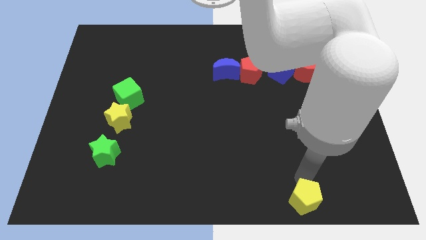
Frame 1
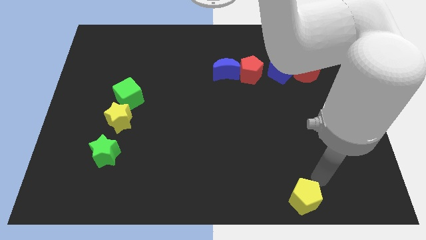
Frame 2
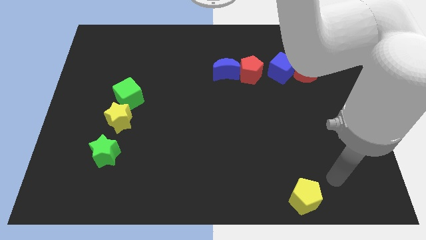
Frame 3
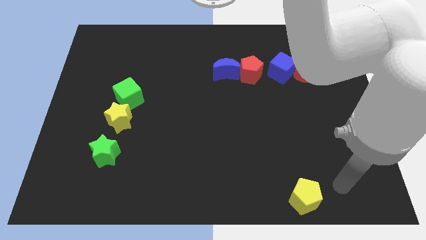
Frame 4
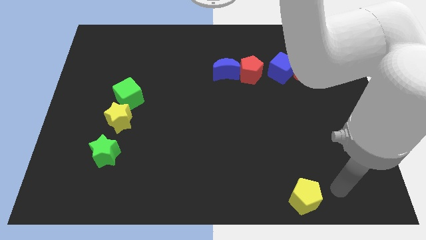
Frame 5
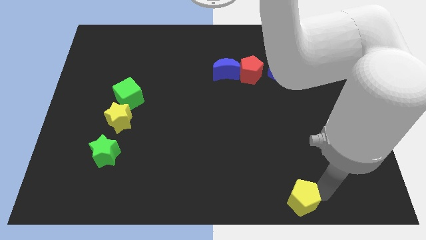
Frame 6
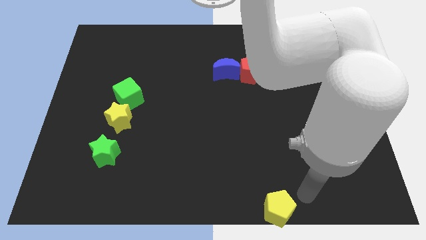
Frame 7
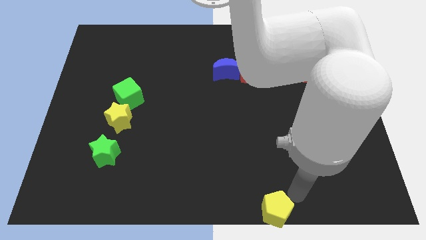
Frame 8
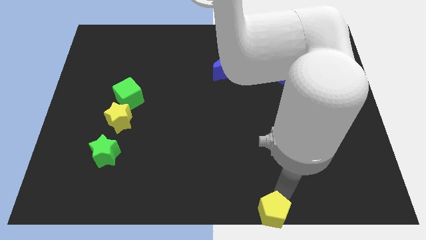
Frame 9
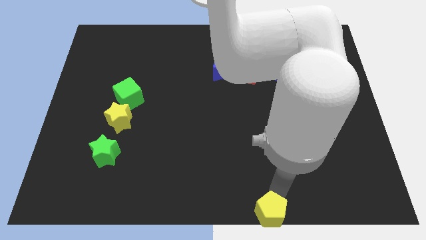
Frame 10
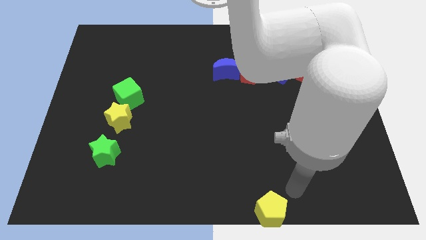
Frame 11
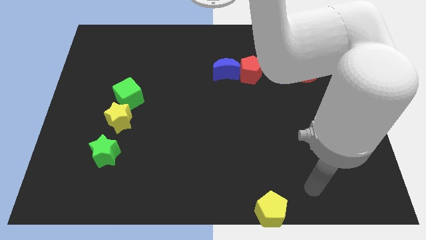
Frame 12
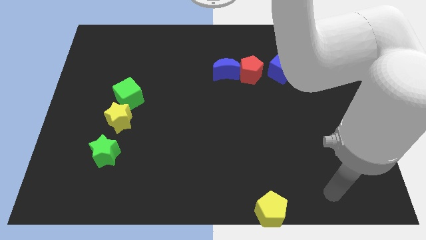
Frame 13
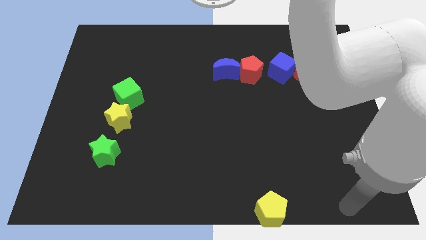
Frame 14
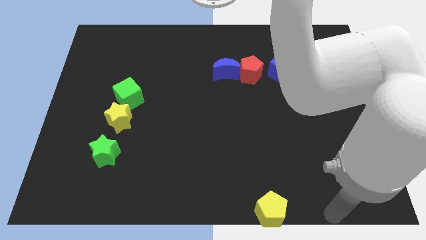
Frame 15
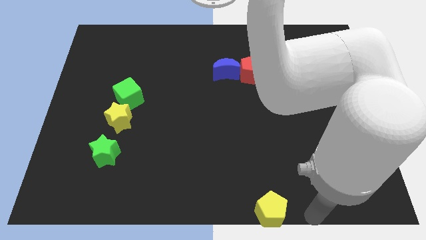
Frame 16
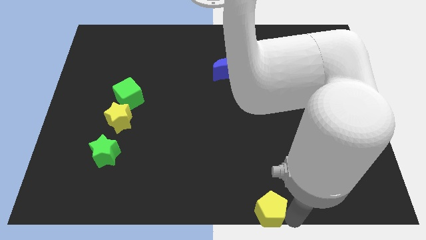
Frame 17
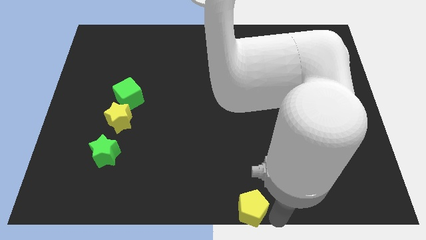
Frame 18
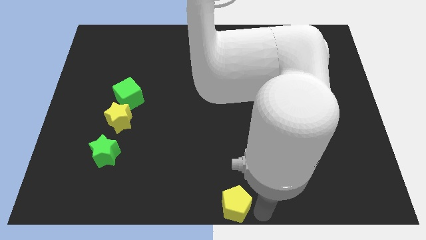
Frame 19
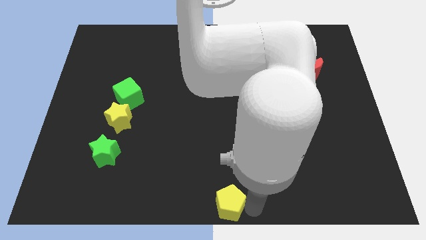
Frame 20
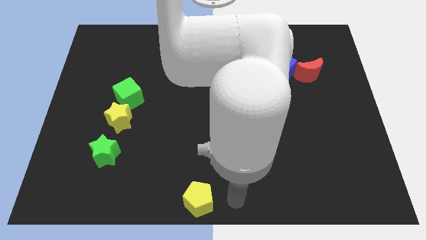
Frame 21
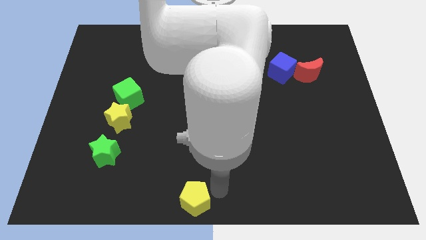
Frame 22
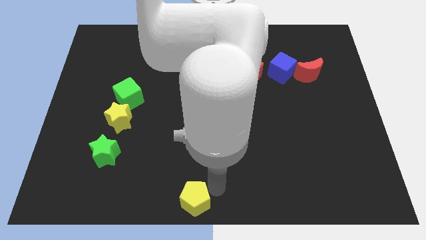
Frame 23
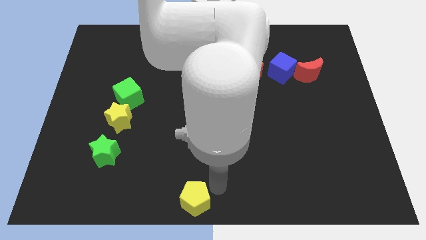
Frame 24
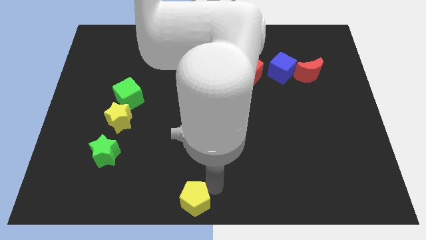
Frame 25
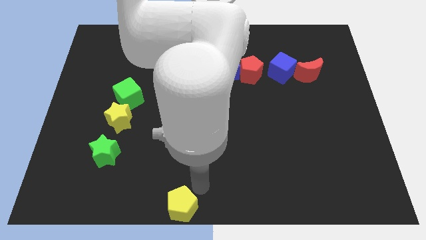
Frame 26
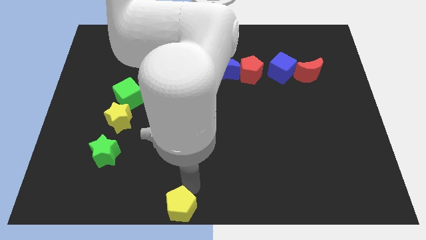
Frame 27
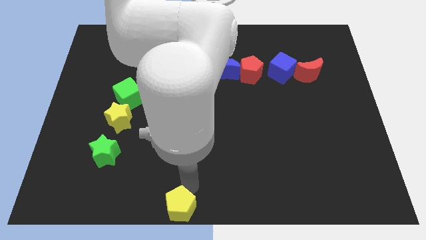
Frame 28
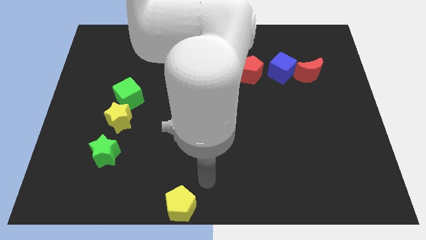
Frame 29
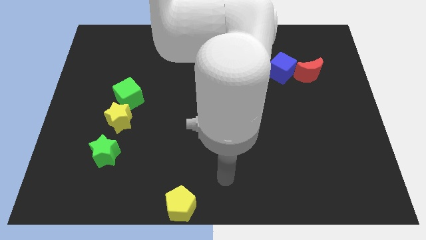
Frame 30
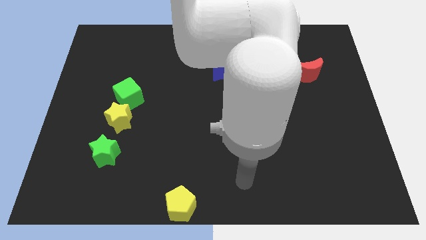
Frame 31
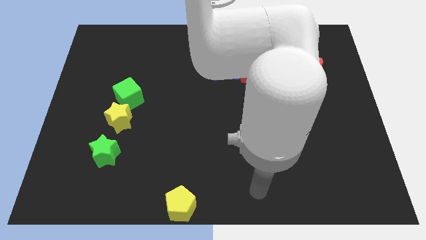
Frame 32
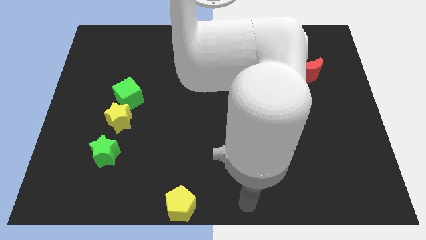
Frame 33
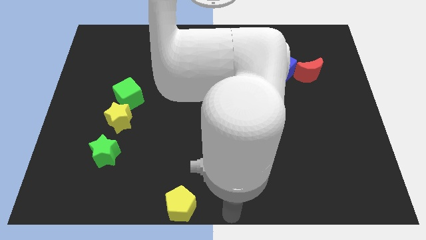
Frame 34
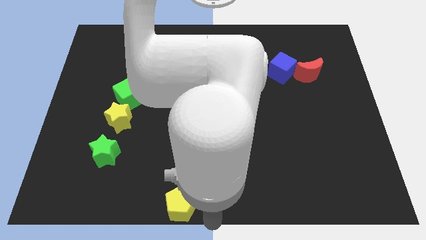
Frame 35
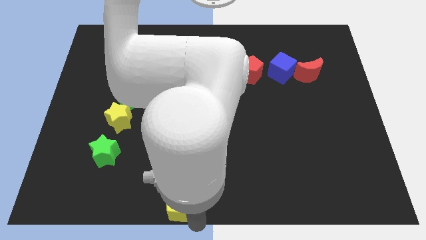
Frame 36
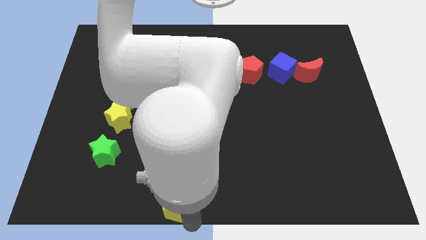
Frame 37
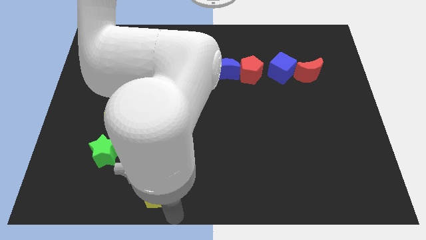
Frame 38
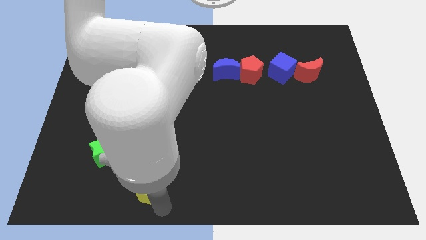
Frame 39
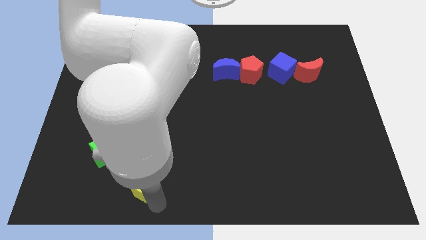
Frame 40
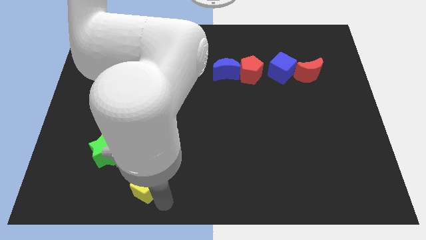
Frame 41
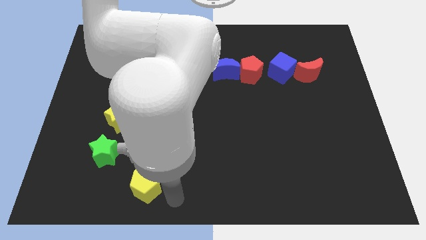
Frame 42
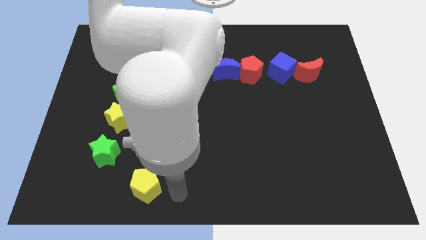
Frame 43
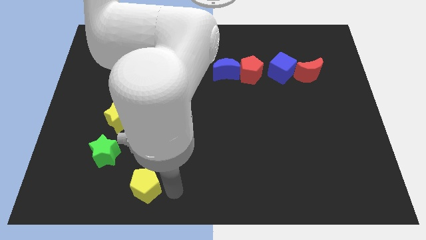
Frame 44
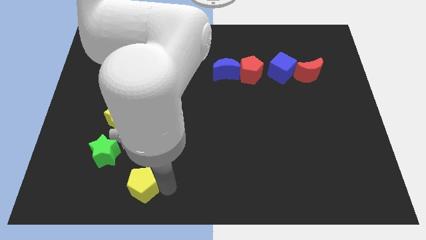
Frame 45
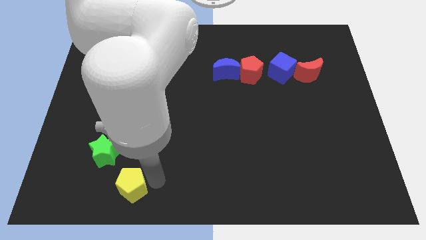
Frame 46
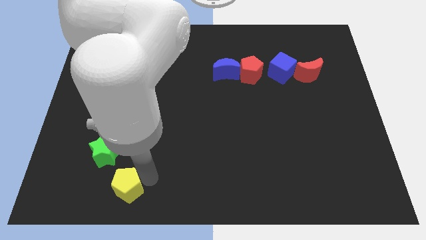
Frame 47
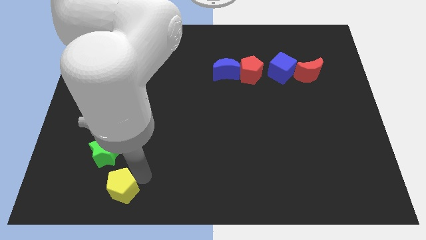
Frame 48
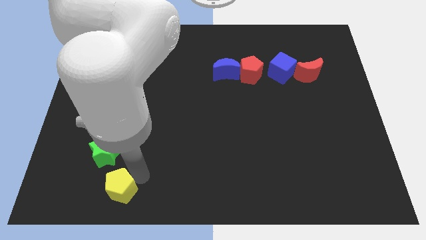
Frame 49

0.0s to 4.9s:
slide the yellow pentagon towards the green star

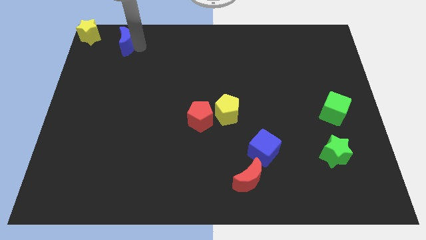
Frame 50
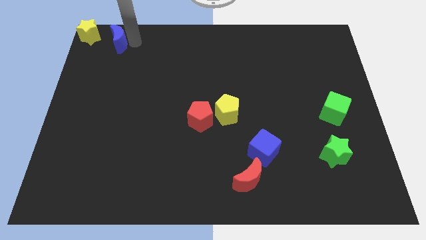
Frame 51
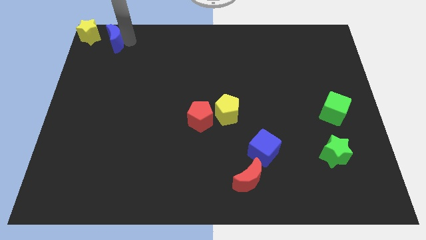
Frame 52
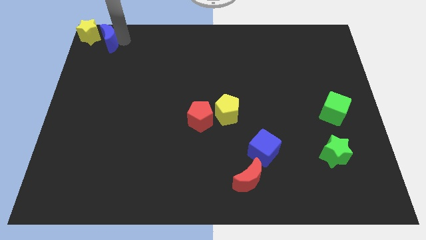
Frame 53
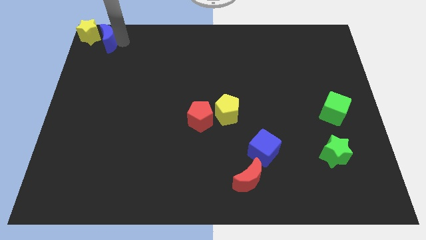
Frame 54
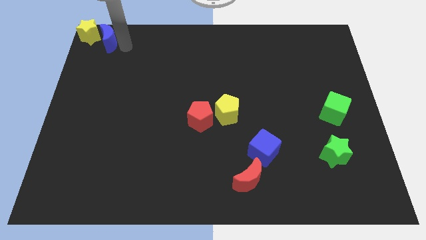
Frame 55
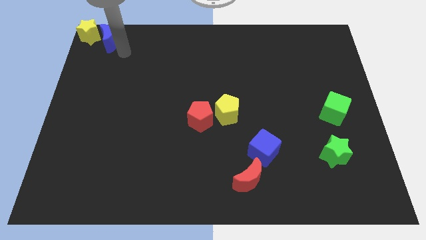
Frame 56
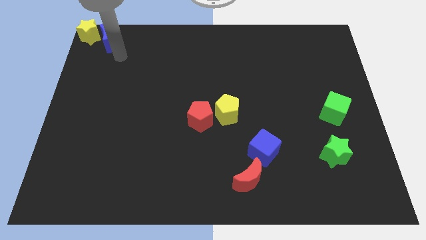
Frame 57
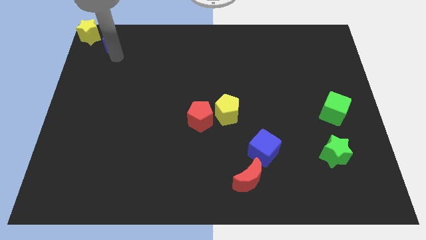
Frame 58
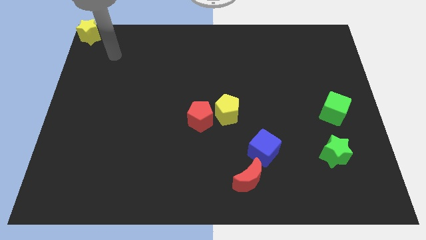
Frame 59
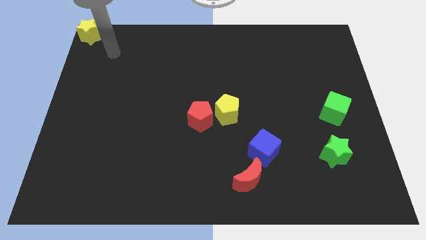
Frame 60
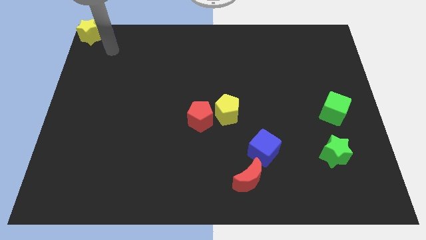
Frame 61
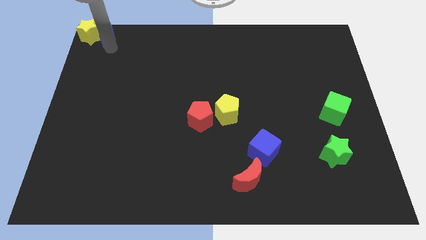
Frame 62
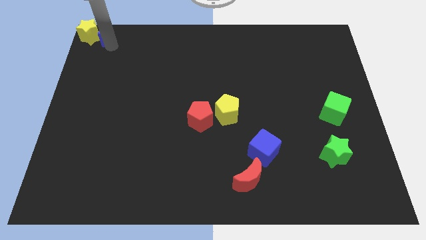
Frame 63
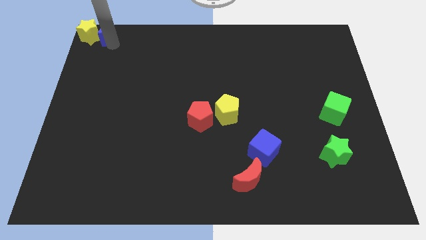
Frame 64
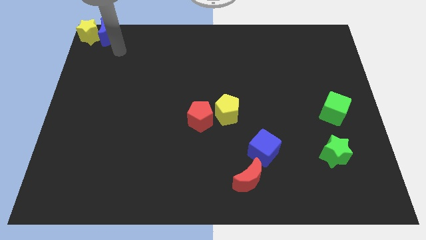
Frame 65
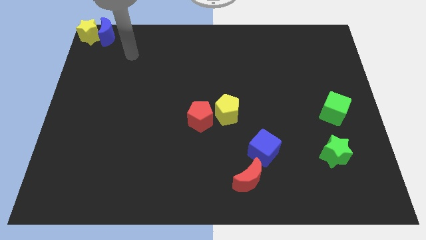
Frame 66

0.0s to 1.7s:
put the blue moon to the right of the yellow star

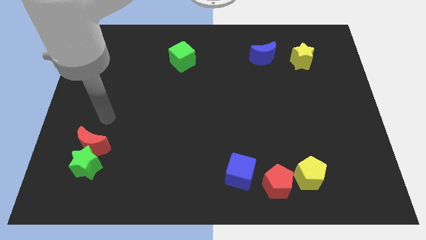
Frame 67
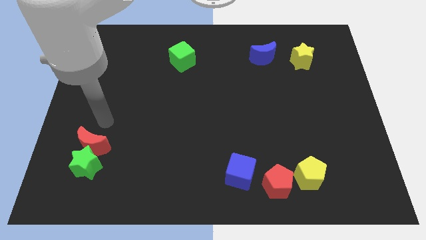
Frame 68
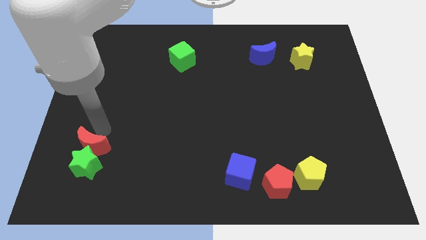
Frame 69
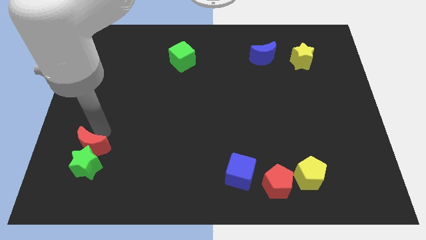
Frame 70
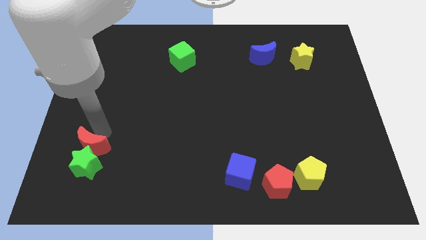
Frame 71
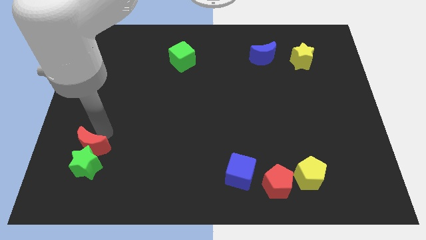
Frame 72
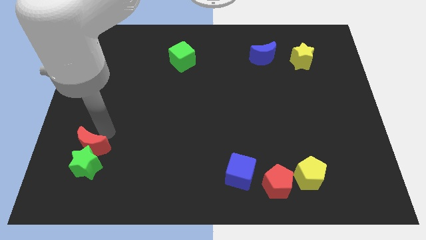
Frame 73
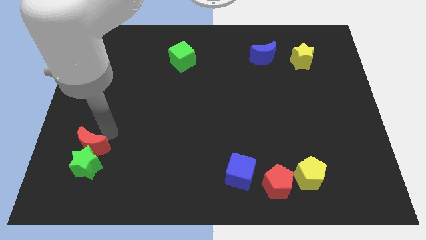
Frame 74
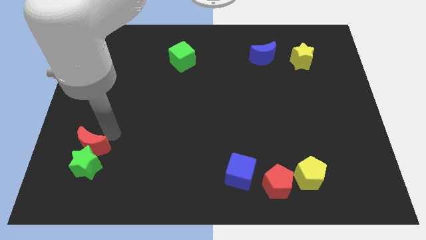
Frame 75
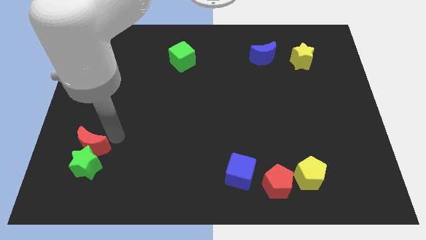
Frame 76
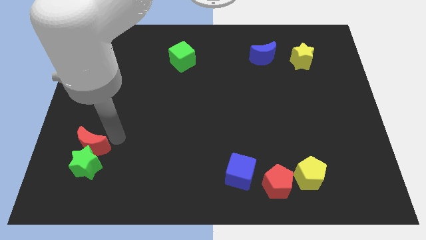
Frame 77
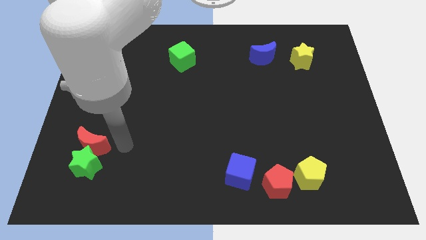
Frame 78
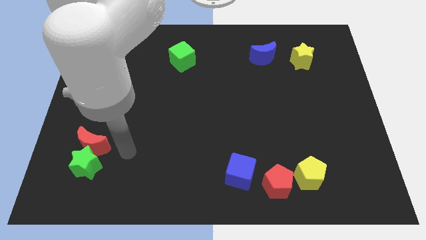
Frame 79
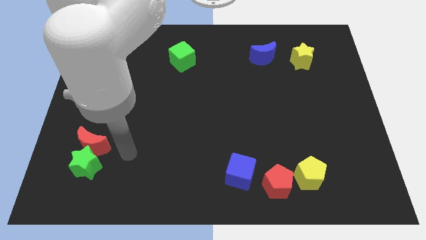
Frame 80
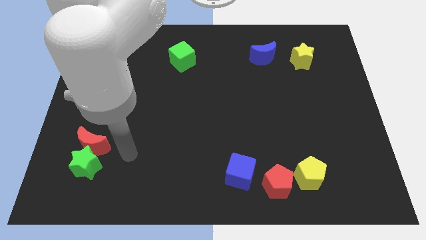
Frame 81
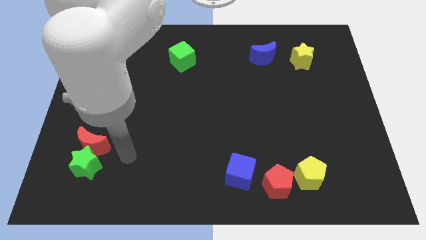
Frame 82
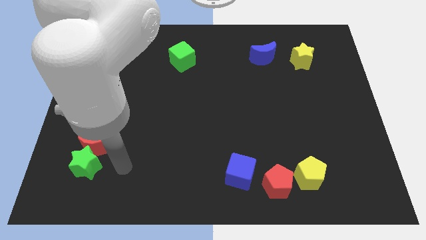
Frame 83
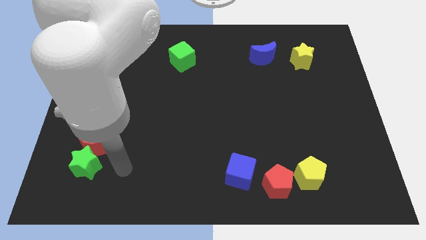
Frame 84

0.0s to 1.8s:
place your hand to the right of the green star

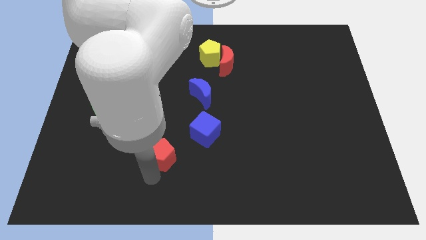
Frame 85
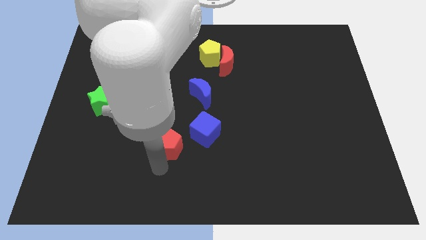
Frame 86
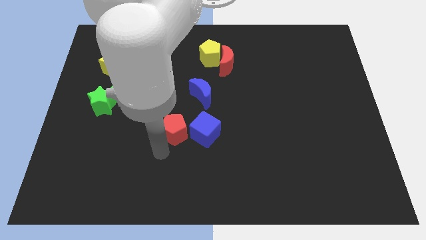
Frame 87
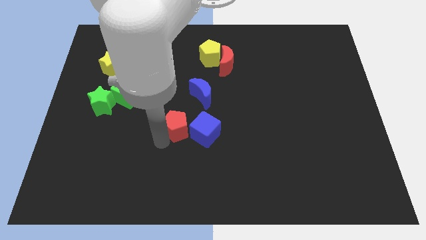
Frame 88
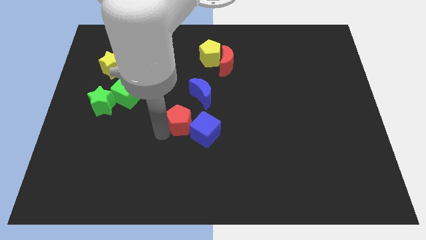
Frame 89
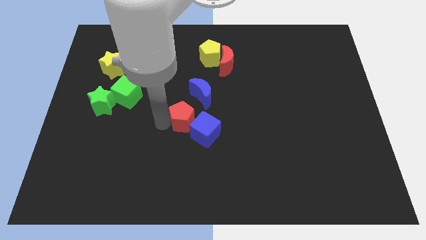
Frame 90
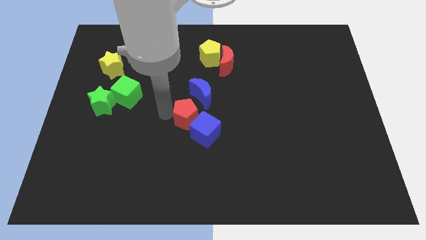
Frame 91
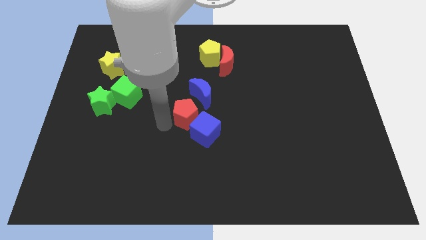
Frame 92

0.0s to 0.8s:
move the red pentagon between the blue crescent and the blue cube on the board

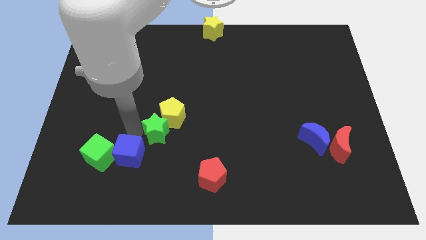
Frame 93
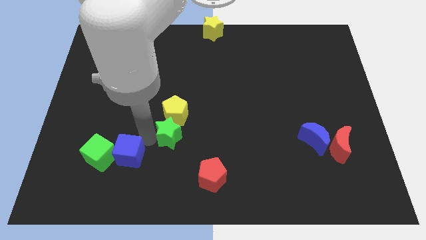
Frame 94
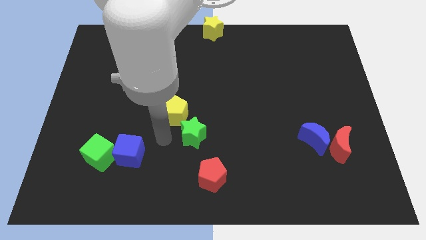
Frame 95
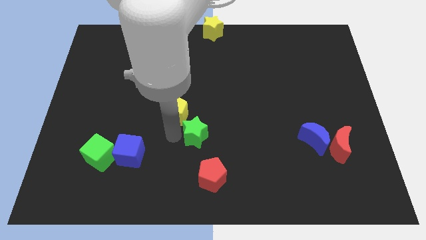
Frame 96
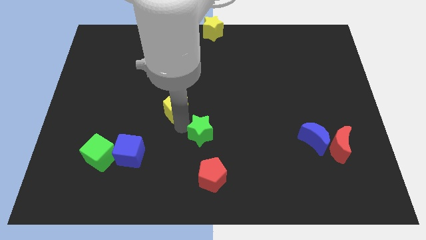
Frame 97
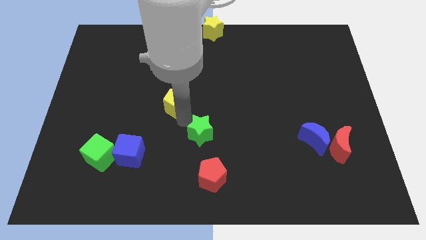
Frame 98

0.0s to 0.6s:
place the green star in between red pentagon and yellow pentagon
